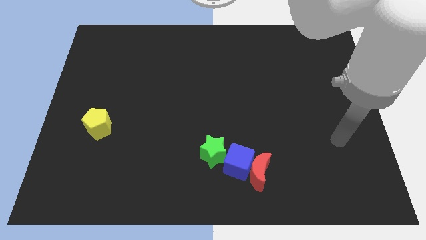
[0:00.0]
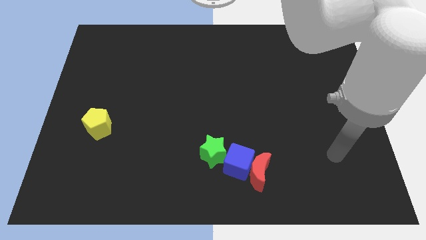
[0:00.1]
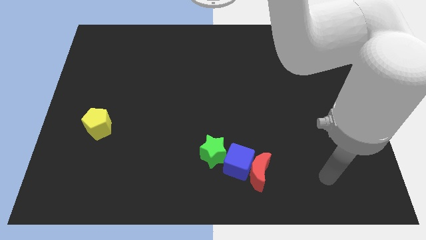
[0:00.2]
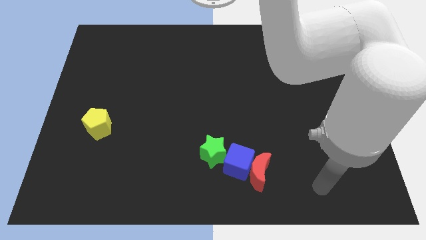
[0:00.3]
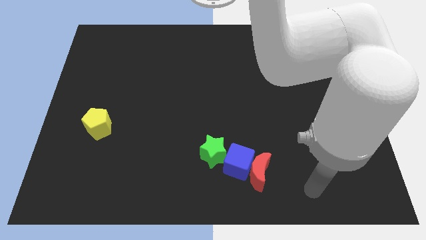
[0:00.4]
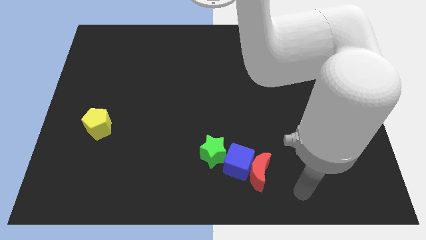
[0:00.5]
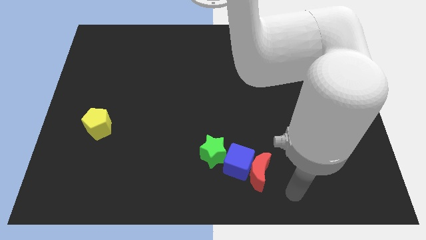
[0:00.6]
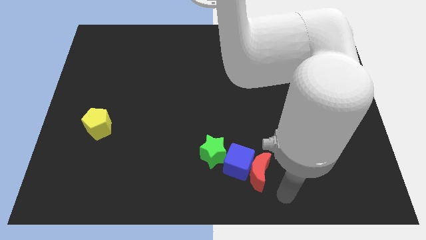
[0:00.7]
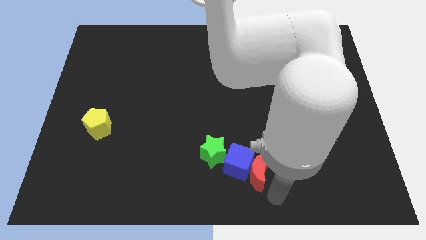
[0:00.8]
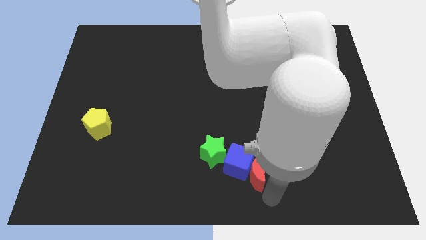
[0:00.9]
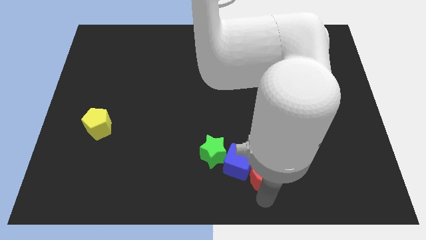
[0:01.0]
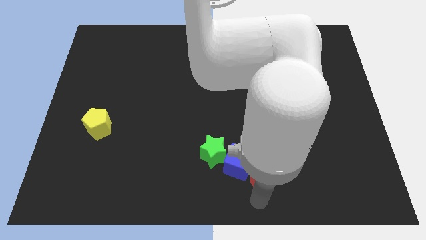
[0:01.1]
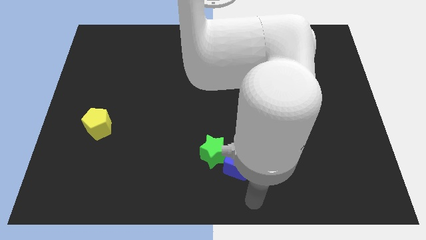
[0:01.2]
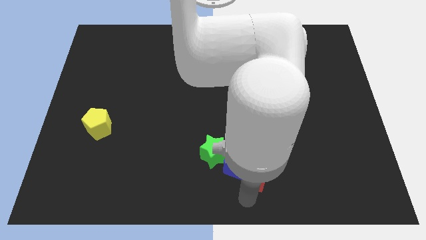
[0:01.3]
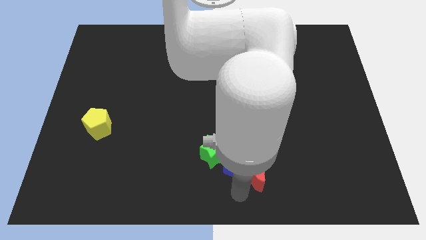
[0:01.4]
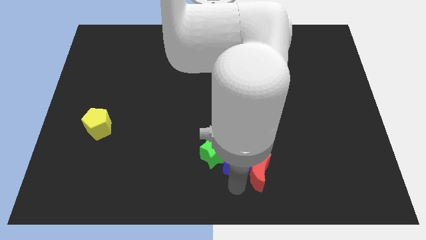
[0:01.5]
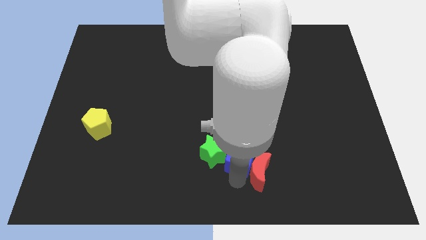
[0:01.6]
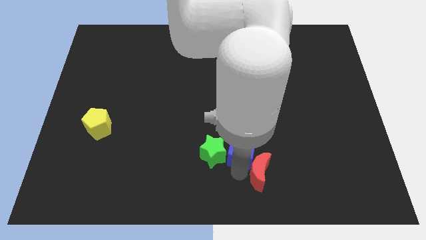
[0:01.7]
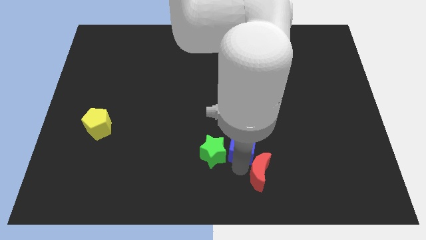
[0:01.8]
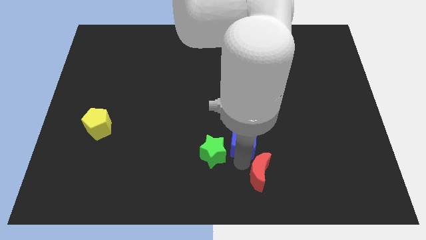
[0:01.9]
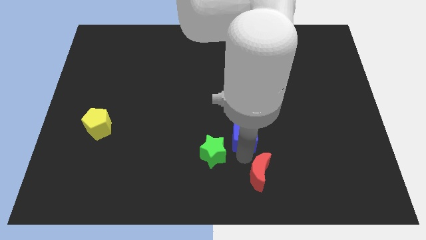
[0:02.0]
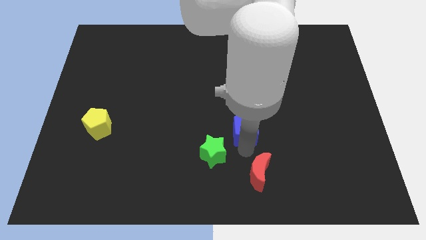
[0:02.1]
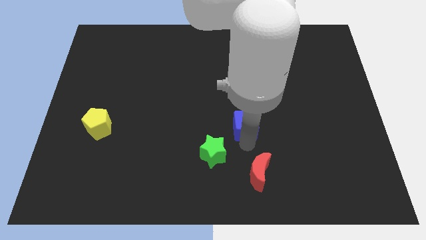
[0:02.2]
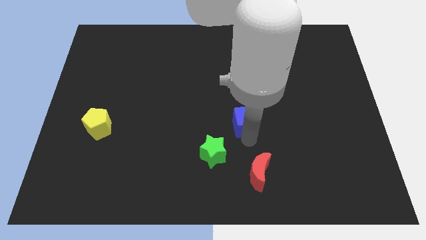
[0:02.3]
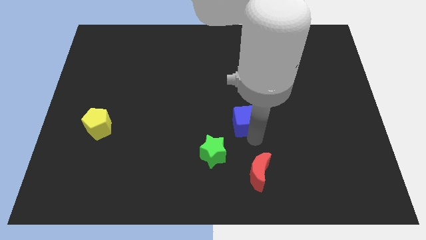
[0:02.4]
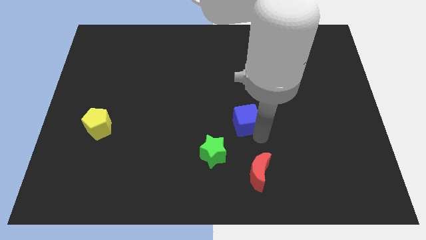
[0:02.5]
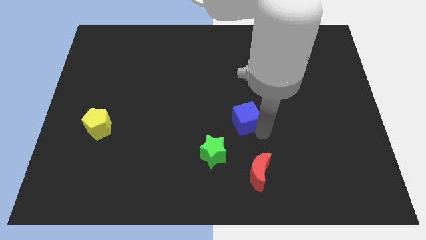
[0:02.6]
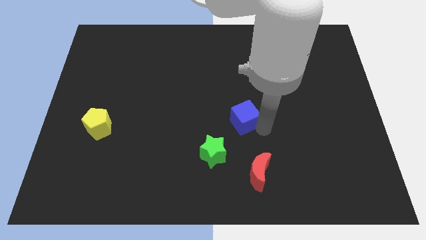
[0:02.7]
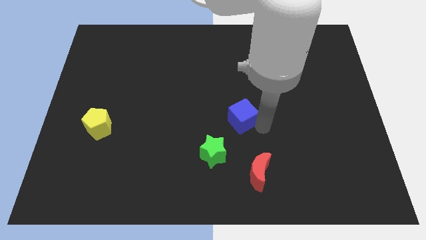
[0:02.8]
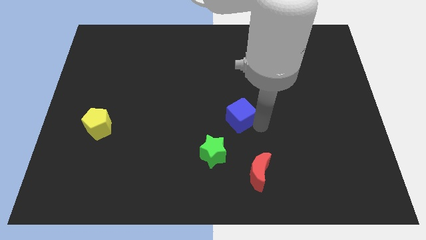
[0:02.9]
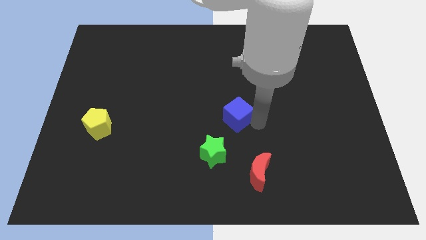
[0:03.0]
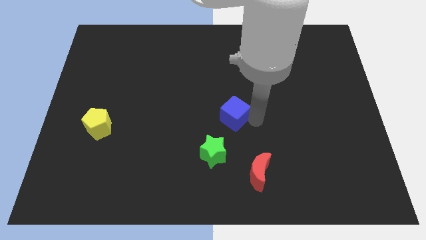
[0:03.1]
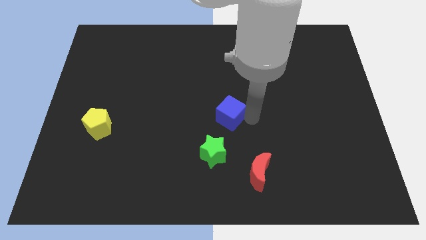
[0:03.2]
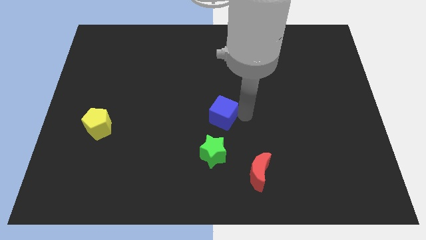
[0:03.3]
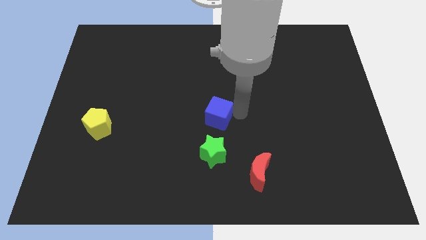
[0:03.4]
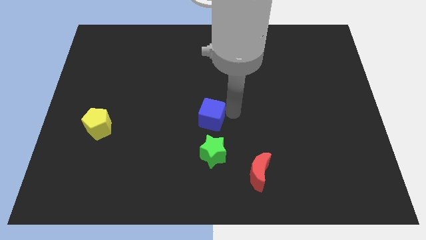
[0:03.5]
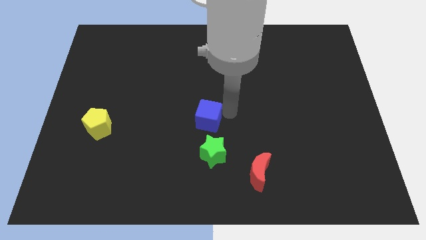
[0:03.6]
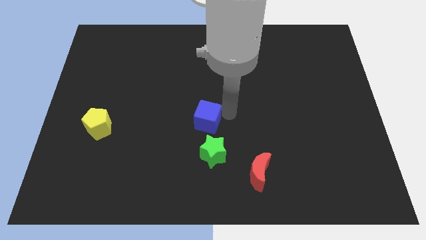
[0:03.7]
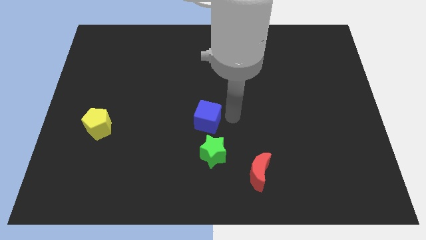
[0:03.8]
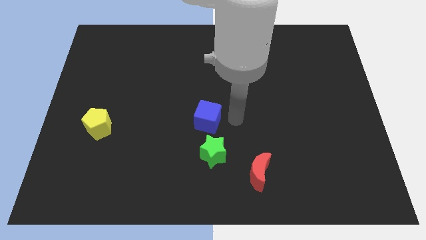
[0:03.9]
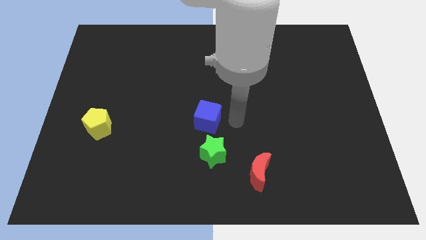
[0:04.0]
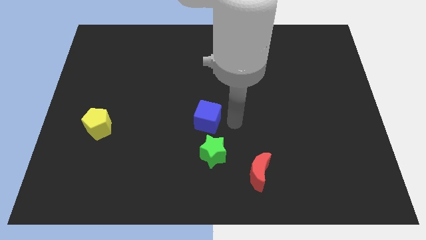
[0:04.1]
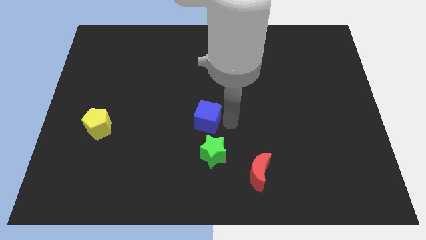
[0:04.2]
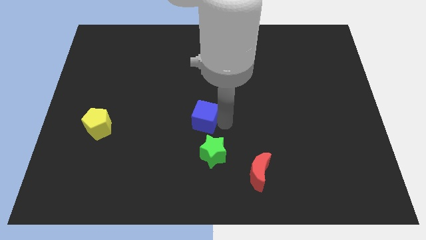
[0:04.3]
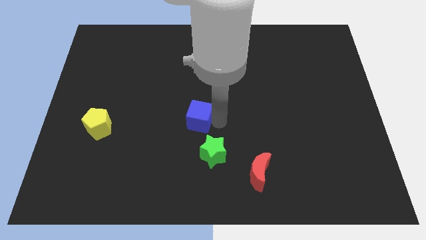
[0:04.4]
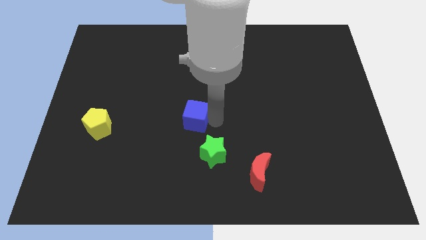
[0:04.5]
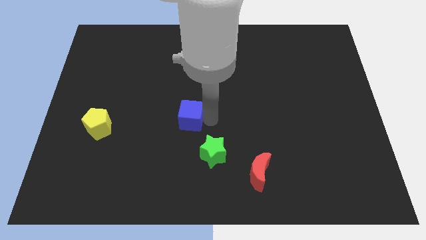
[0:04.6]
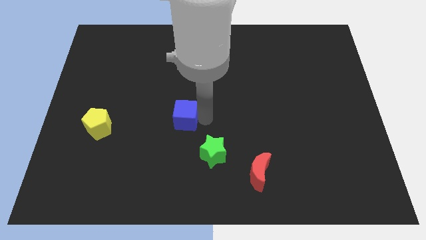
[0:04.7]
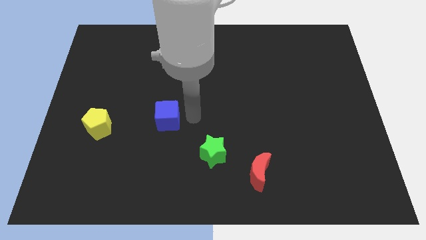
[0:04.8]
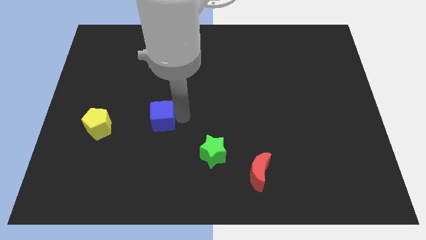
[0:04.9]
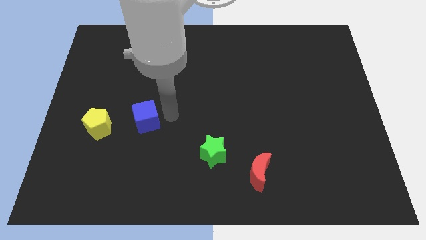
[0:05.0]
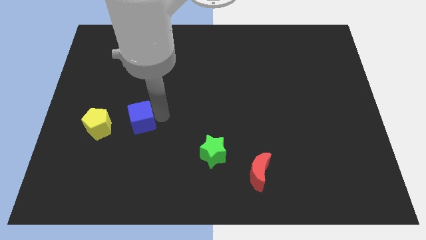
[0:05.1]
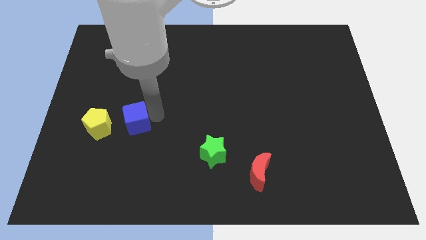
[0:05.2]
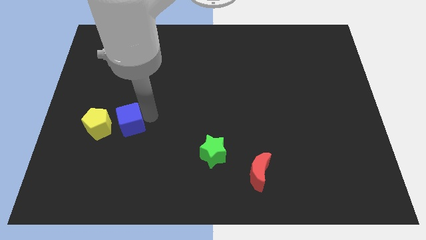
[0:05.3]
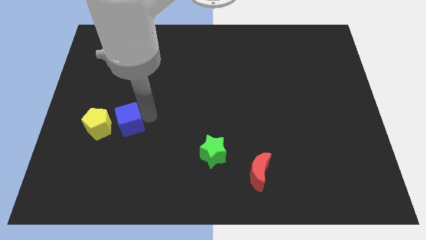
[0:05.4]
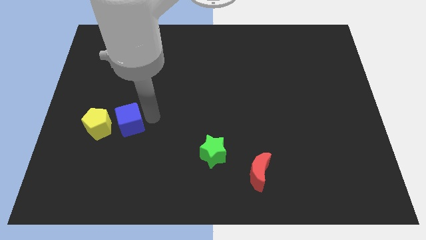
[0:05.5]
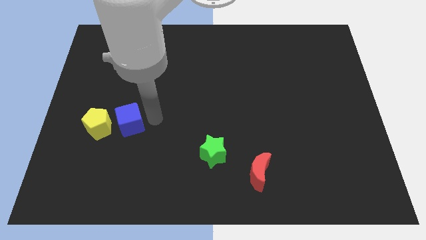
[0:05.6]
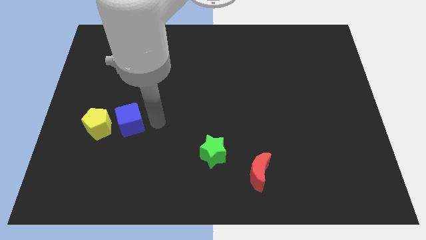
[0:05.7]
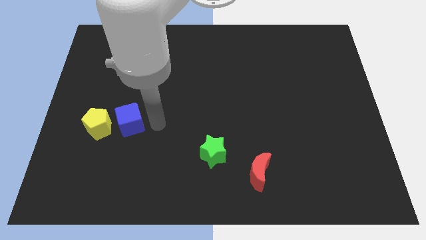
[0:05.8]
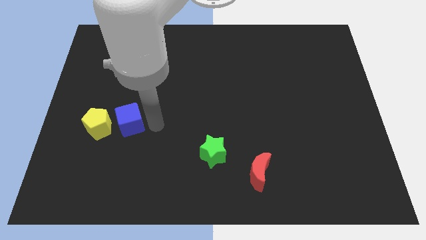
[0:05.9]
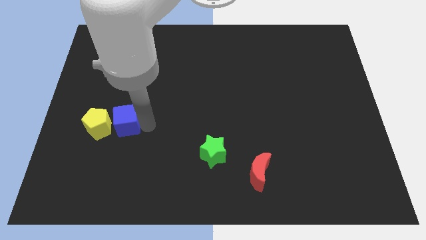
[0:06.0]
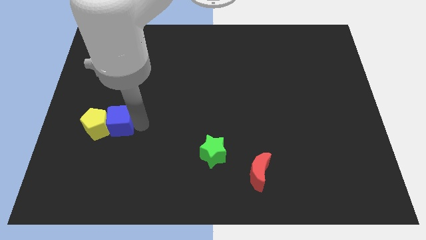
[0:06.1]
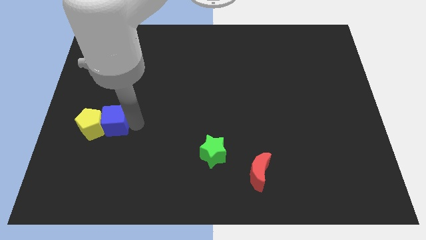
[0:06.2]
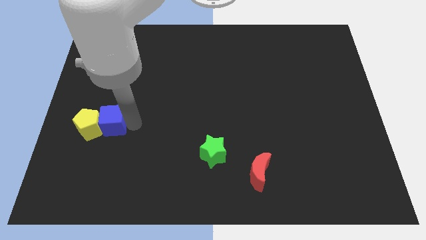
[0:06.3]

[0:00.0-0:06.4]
slide the cube towards the yellow pentagon

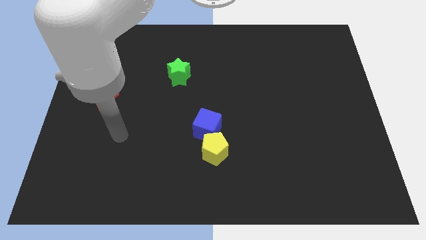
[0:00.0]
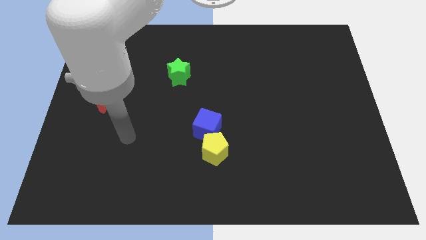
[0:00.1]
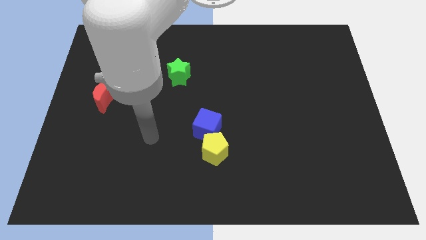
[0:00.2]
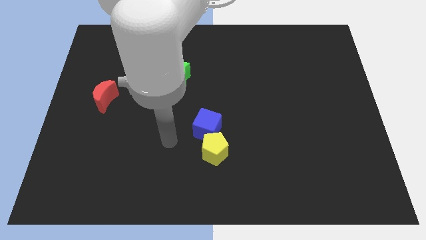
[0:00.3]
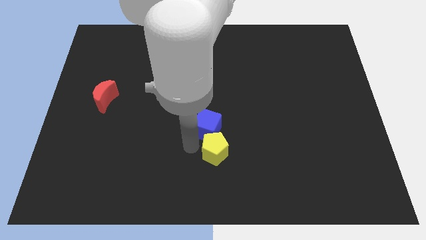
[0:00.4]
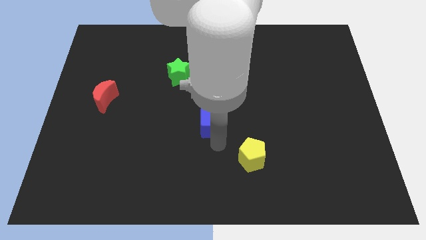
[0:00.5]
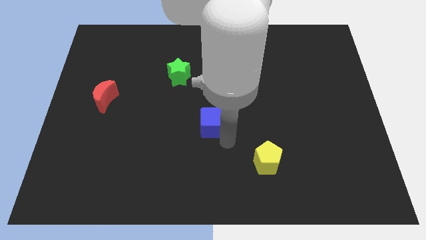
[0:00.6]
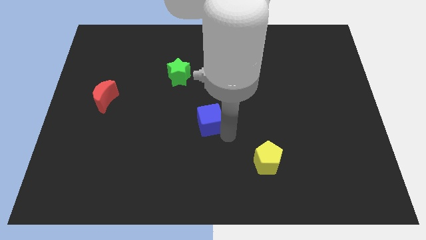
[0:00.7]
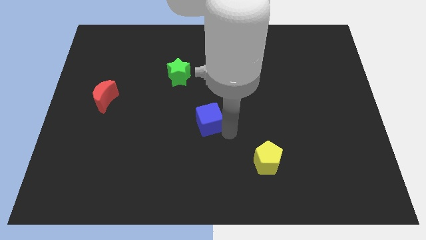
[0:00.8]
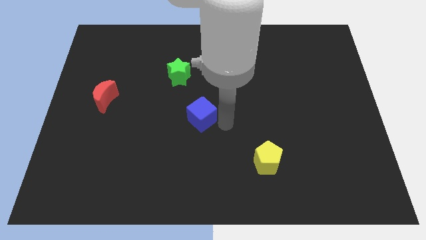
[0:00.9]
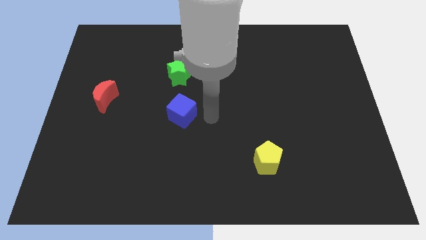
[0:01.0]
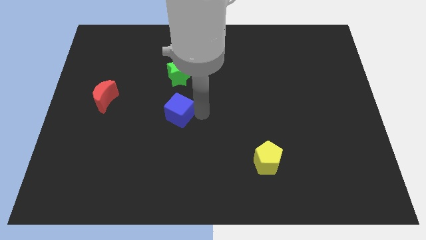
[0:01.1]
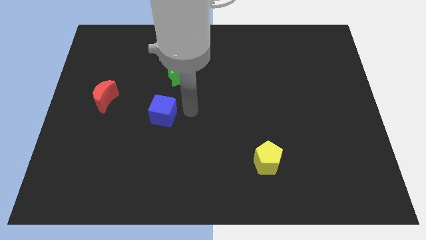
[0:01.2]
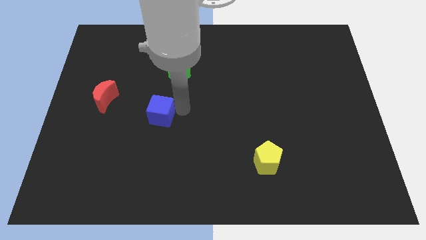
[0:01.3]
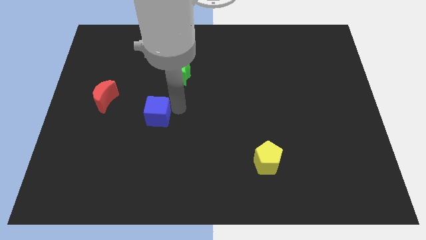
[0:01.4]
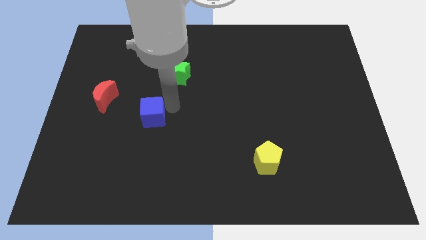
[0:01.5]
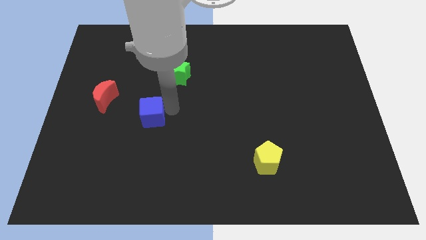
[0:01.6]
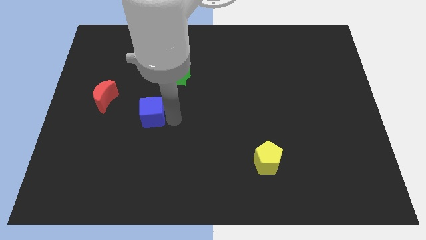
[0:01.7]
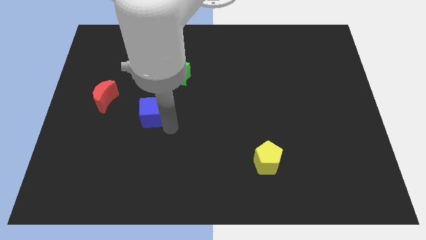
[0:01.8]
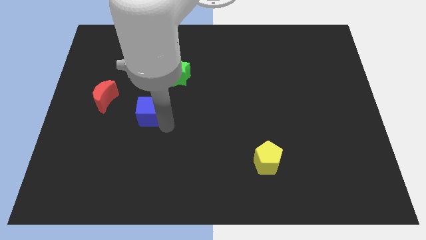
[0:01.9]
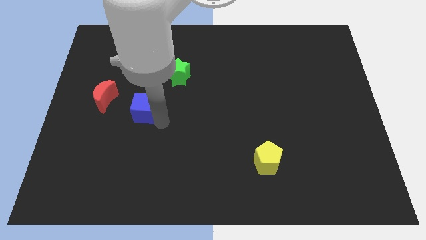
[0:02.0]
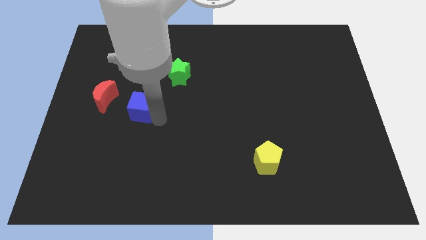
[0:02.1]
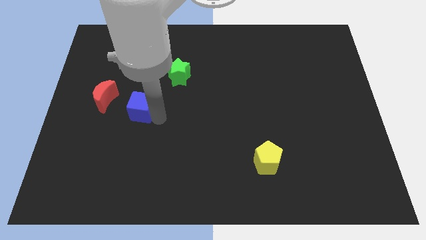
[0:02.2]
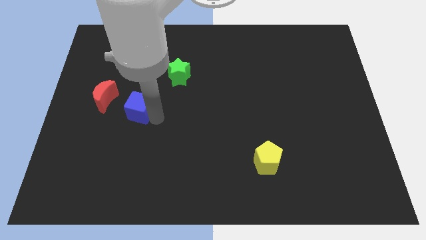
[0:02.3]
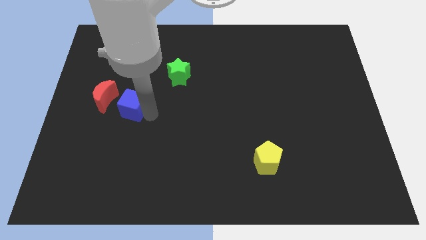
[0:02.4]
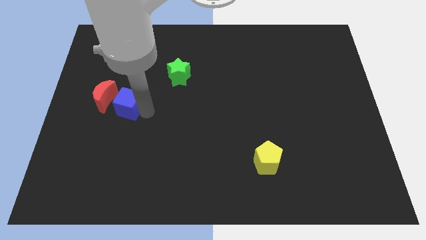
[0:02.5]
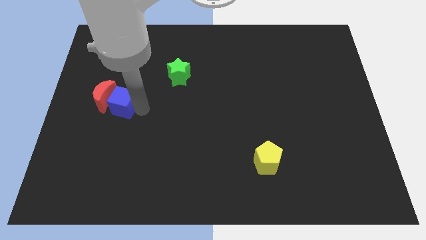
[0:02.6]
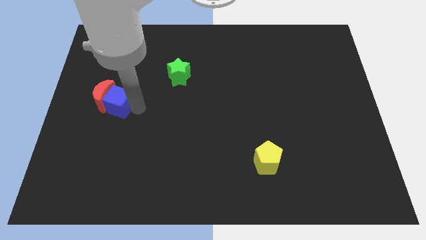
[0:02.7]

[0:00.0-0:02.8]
push the cube close to the red moon
